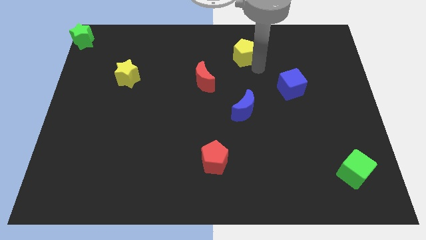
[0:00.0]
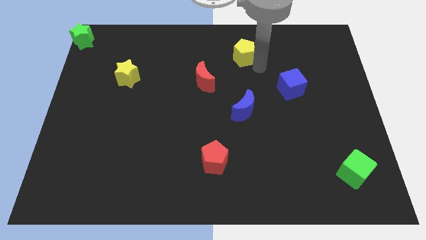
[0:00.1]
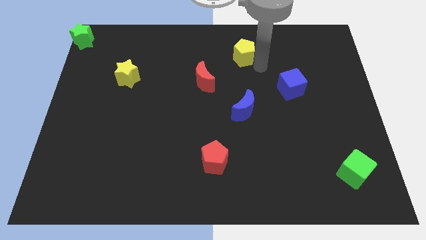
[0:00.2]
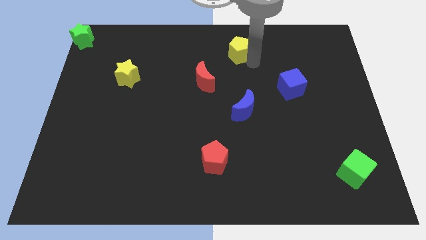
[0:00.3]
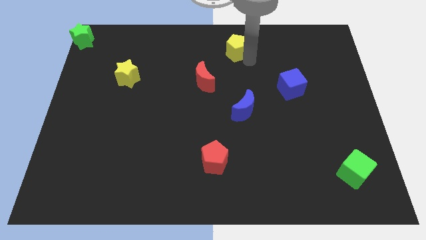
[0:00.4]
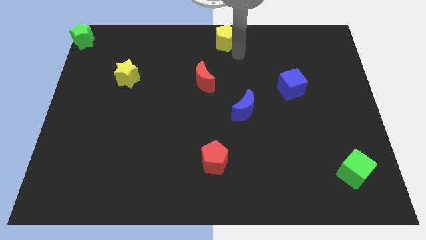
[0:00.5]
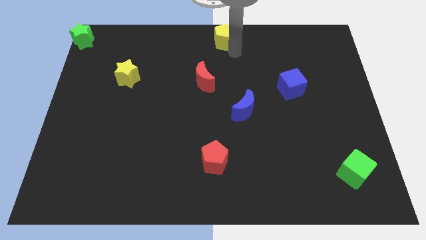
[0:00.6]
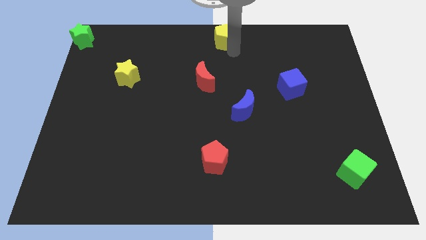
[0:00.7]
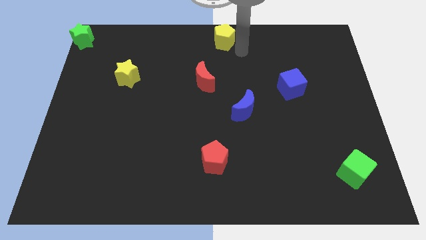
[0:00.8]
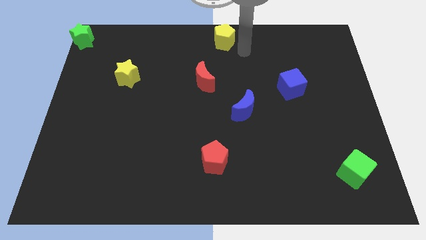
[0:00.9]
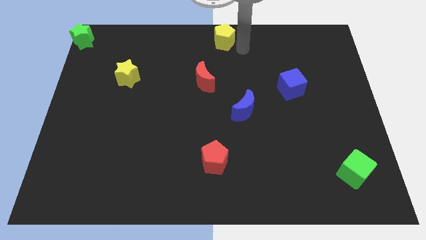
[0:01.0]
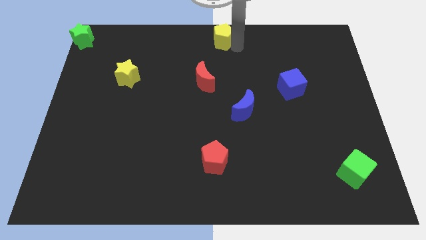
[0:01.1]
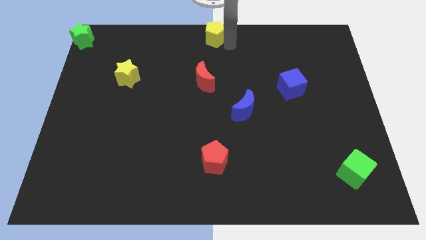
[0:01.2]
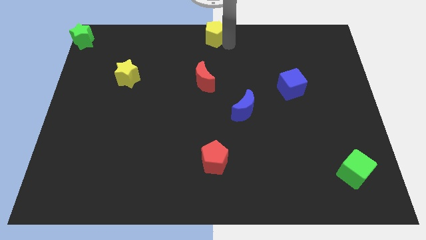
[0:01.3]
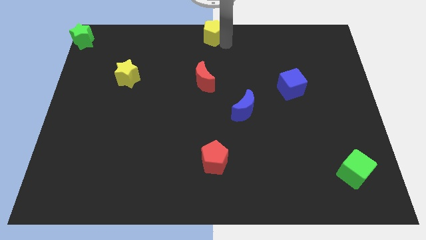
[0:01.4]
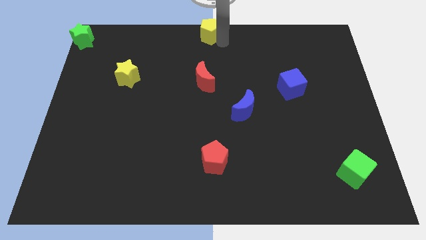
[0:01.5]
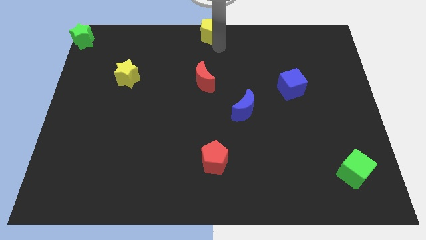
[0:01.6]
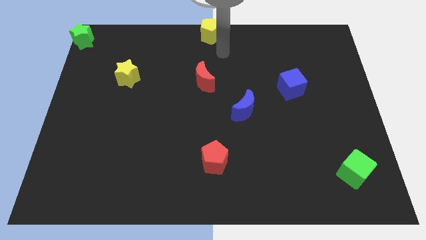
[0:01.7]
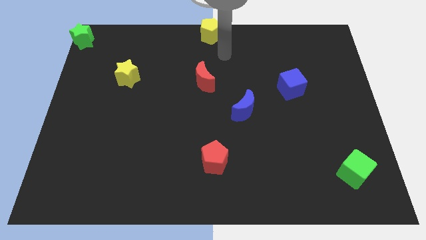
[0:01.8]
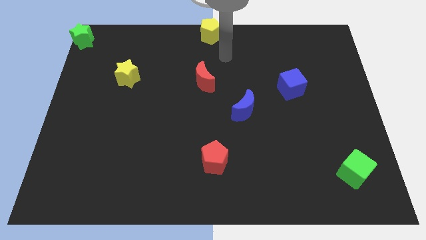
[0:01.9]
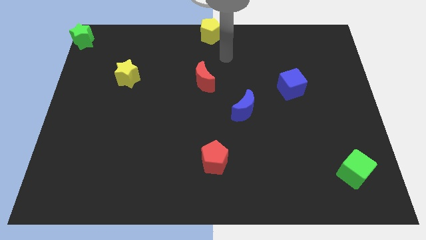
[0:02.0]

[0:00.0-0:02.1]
move yellow pentagon to the top center

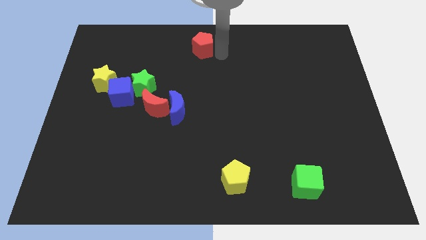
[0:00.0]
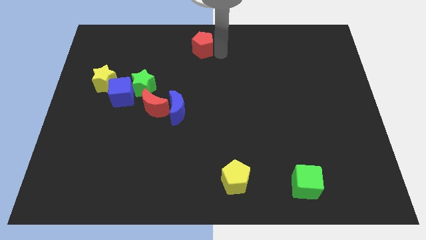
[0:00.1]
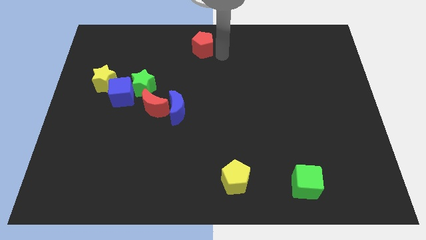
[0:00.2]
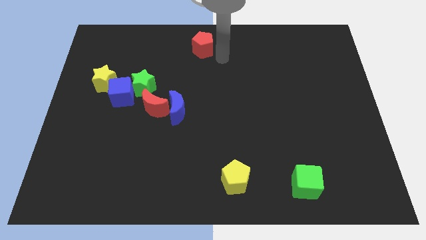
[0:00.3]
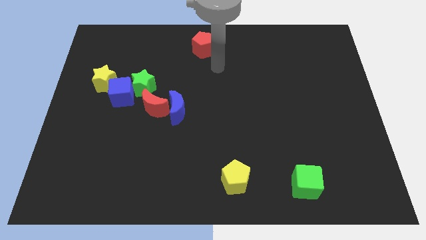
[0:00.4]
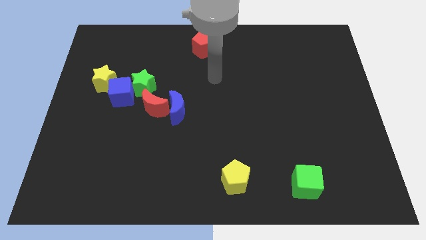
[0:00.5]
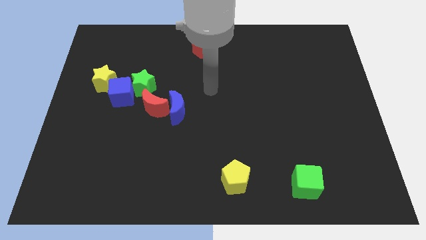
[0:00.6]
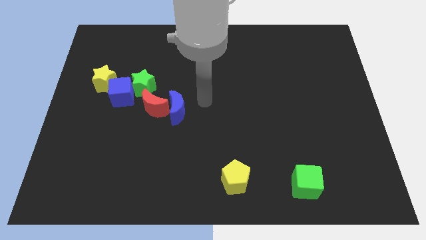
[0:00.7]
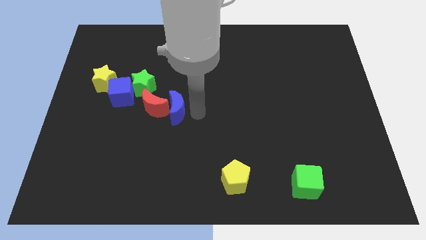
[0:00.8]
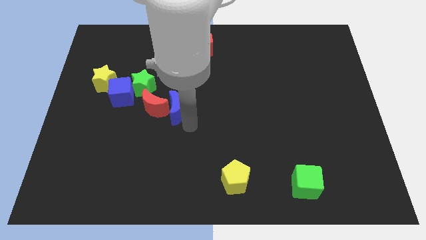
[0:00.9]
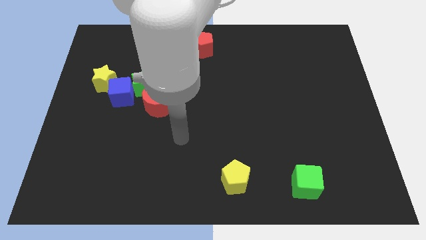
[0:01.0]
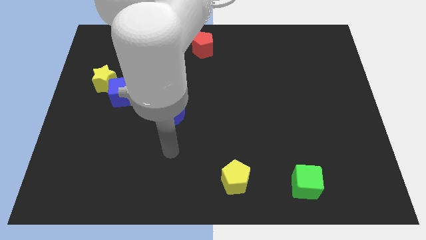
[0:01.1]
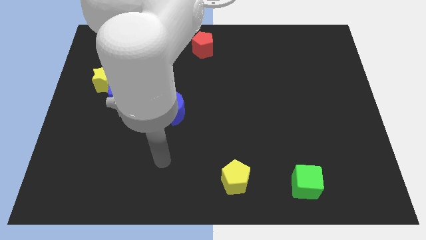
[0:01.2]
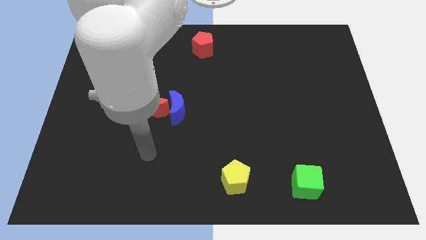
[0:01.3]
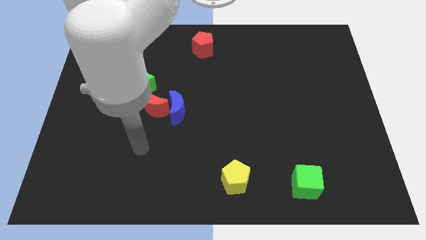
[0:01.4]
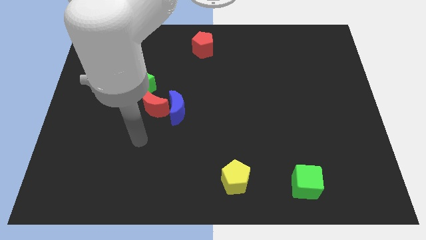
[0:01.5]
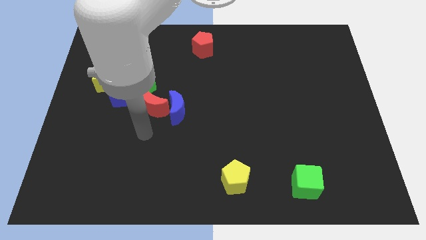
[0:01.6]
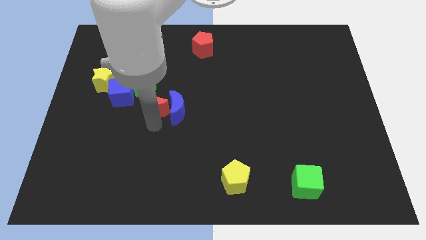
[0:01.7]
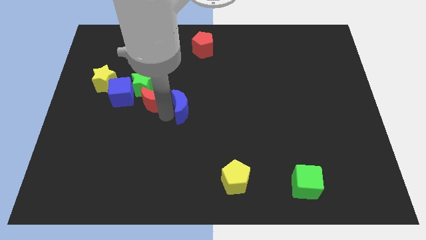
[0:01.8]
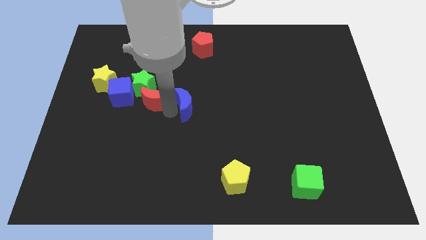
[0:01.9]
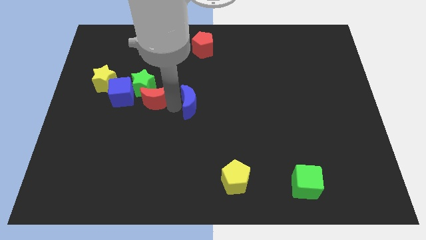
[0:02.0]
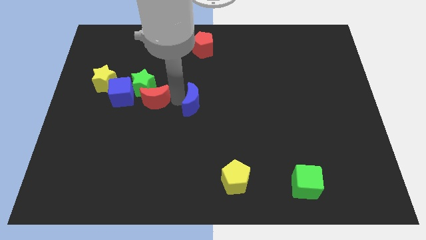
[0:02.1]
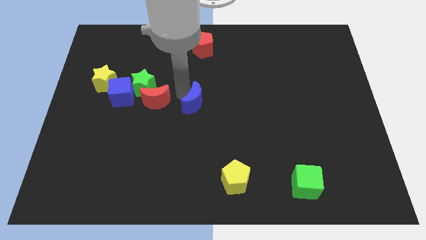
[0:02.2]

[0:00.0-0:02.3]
separate the blue crescent from the red crescent

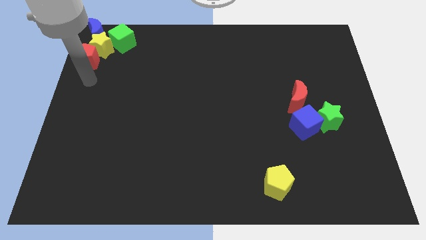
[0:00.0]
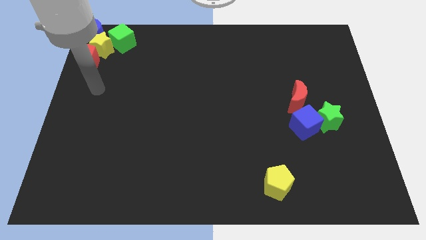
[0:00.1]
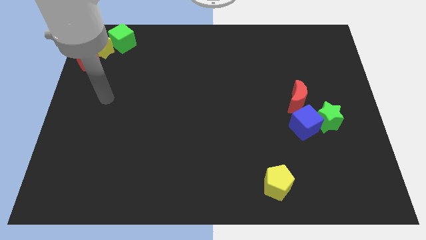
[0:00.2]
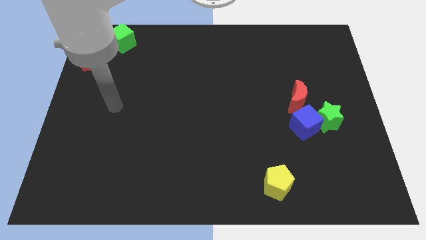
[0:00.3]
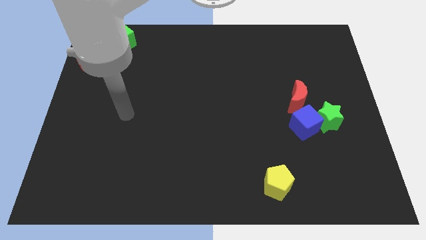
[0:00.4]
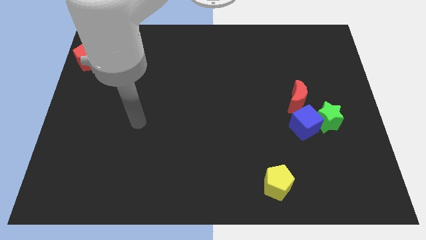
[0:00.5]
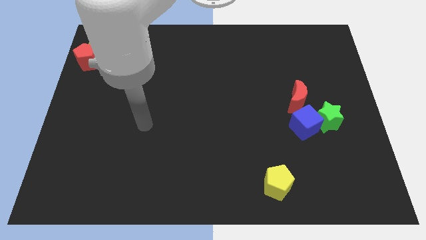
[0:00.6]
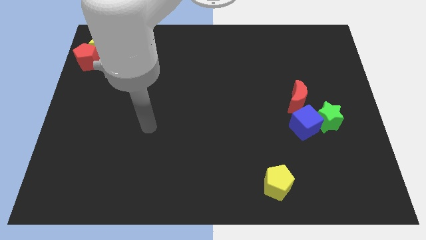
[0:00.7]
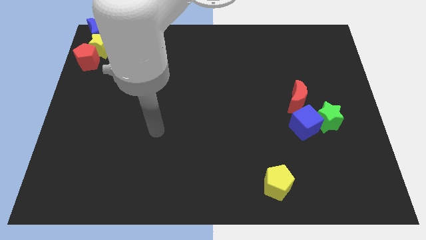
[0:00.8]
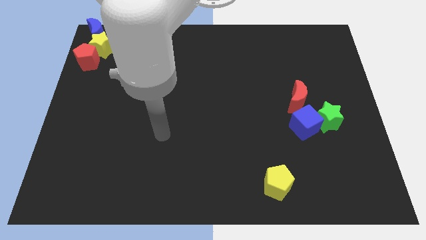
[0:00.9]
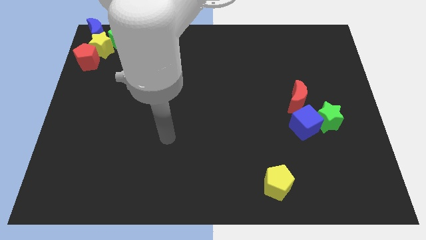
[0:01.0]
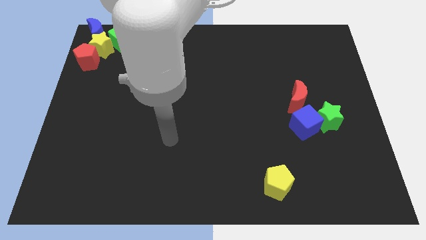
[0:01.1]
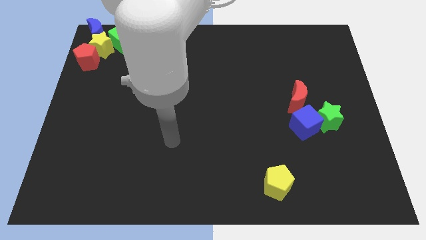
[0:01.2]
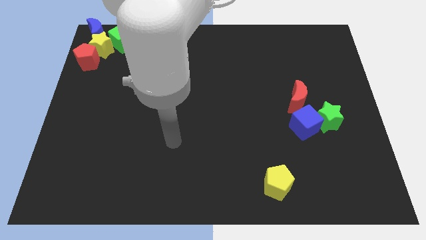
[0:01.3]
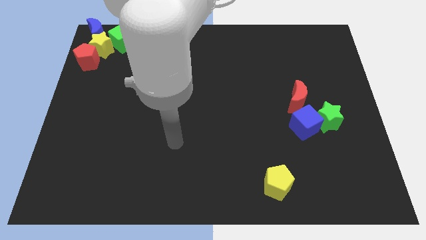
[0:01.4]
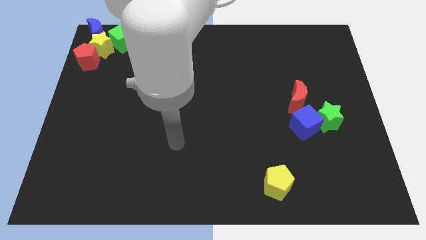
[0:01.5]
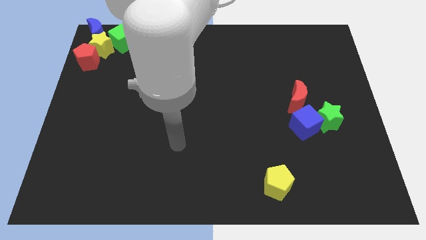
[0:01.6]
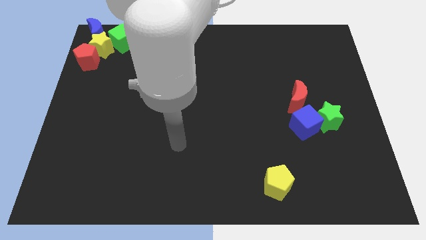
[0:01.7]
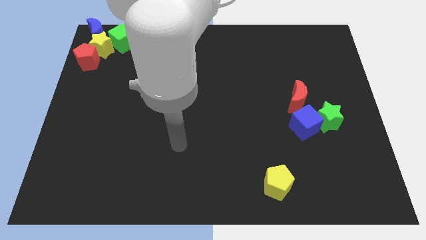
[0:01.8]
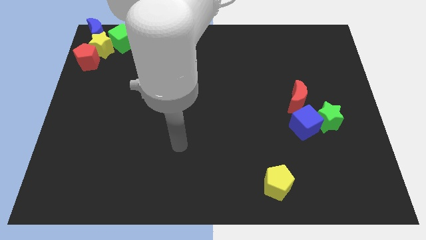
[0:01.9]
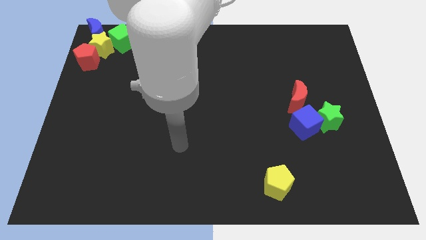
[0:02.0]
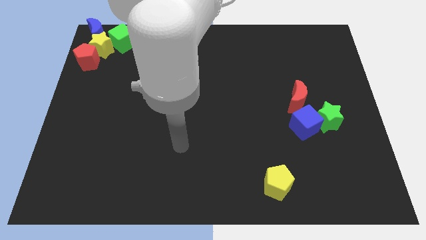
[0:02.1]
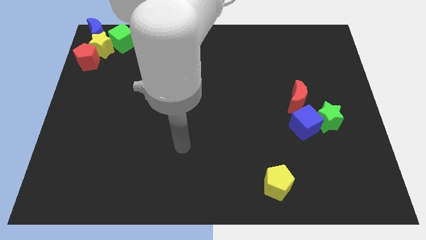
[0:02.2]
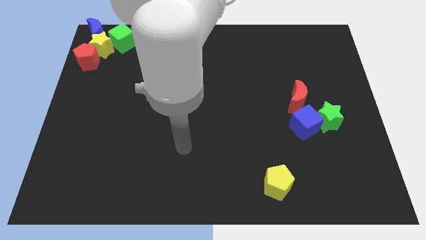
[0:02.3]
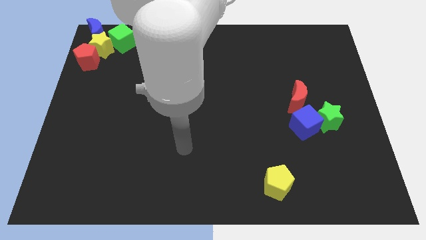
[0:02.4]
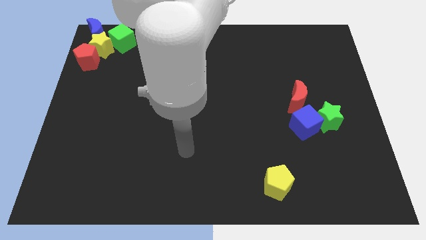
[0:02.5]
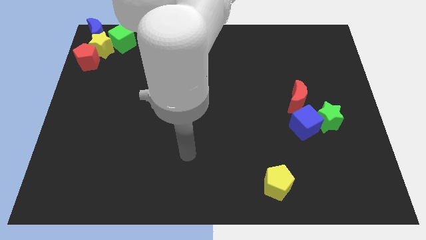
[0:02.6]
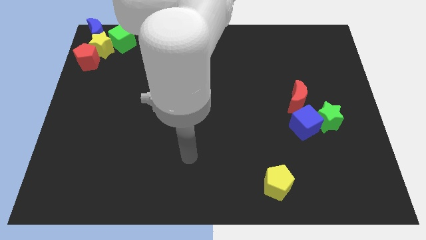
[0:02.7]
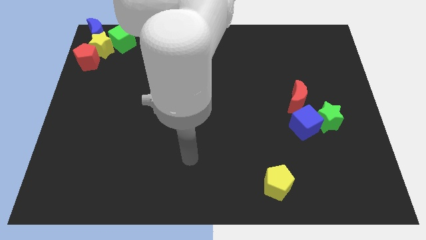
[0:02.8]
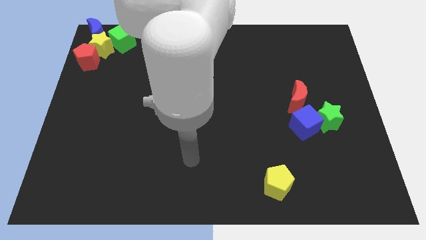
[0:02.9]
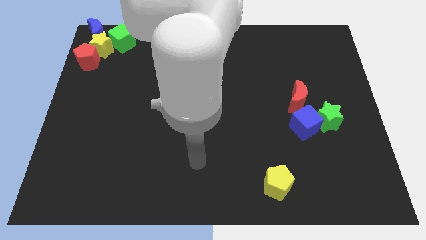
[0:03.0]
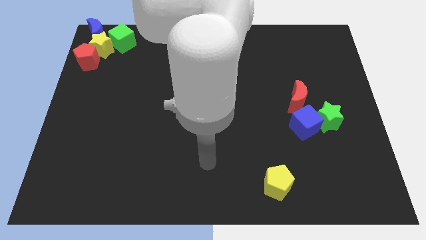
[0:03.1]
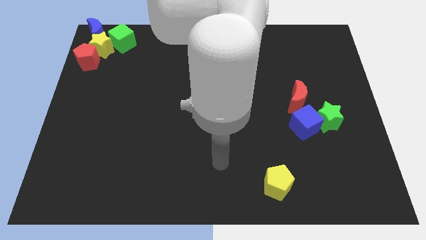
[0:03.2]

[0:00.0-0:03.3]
move the arm towards the yellow pentagon

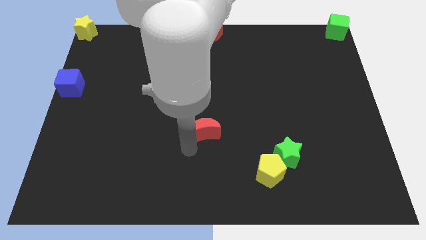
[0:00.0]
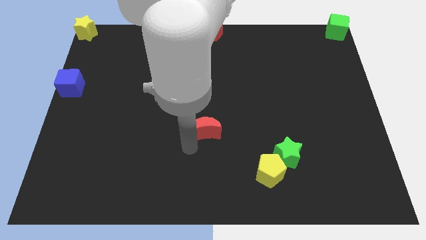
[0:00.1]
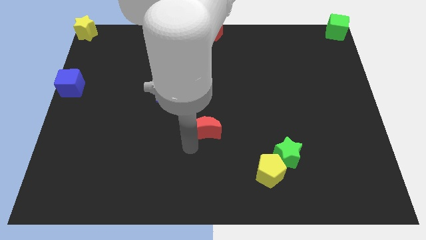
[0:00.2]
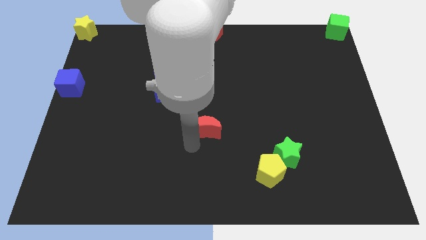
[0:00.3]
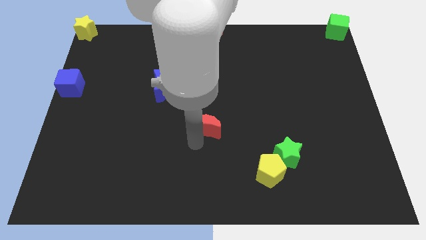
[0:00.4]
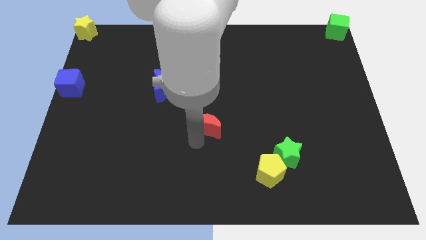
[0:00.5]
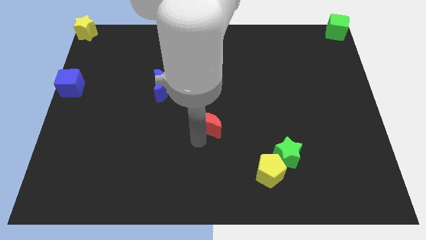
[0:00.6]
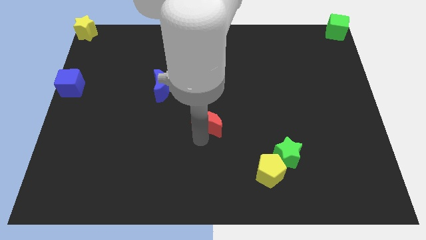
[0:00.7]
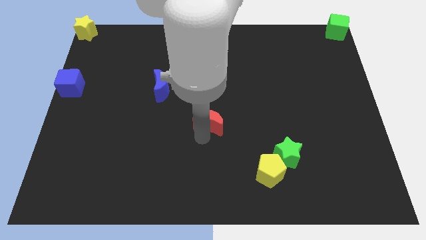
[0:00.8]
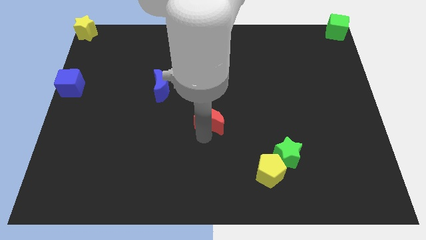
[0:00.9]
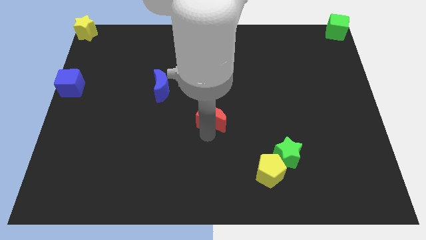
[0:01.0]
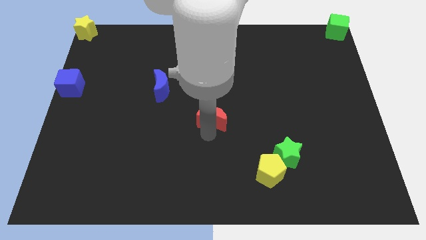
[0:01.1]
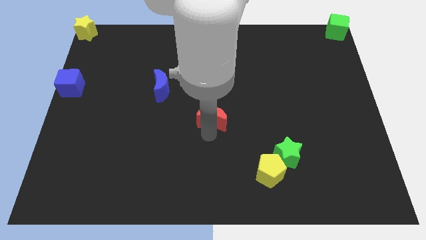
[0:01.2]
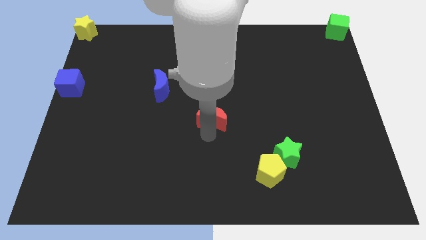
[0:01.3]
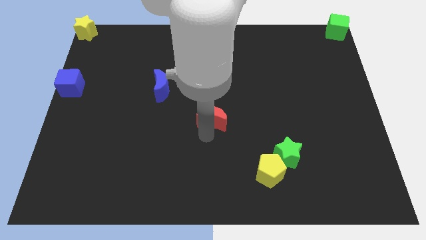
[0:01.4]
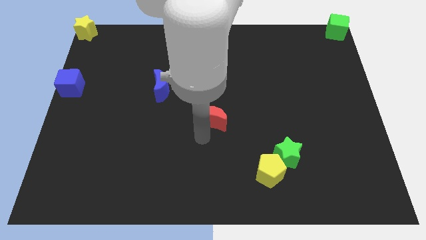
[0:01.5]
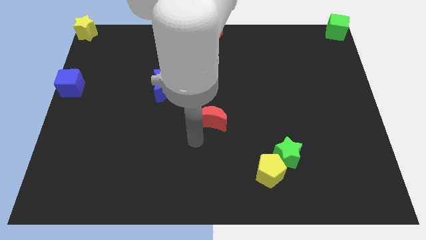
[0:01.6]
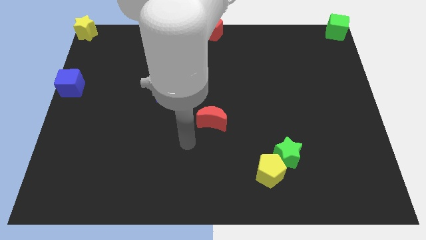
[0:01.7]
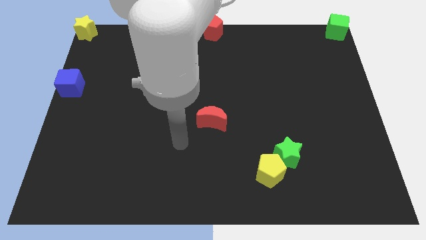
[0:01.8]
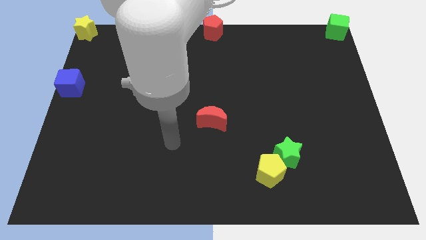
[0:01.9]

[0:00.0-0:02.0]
place the red crescent at the center of the board
